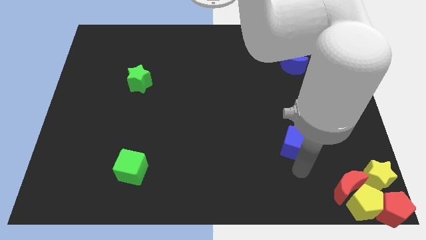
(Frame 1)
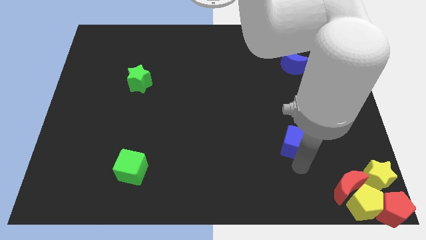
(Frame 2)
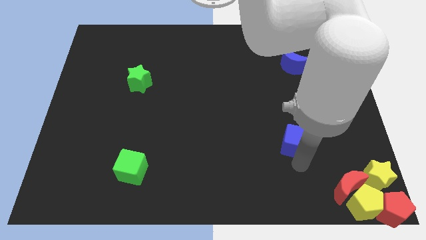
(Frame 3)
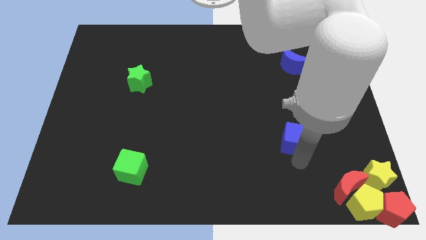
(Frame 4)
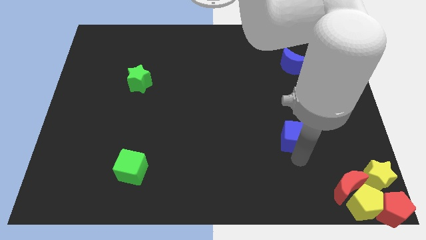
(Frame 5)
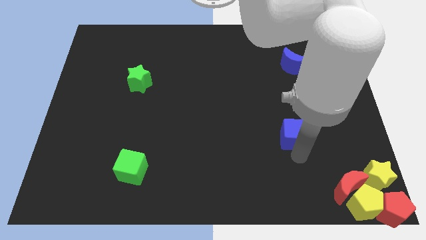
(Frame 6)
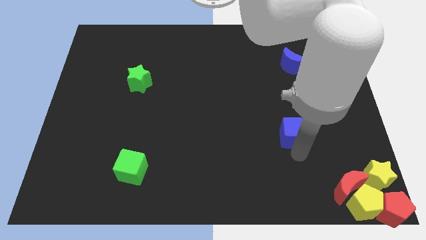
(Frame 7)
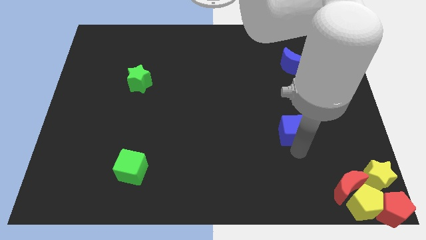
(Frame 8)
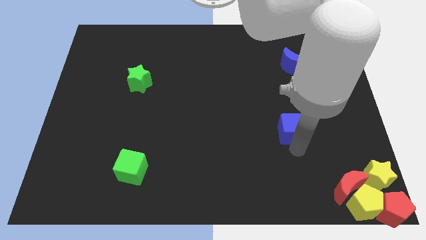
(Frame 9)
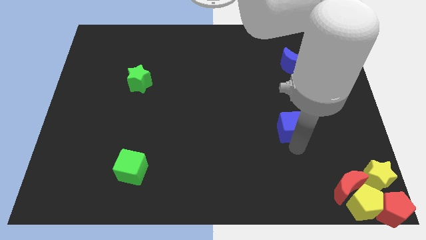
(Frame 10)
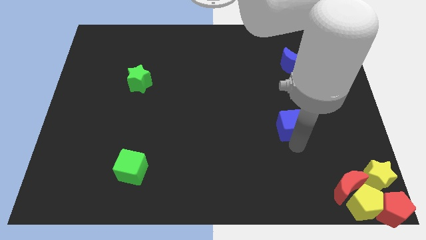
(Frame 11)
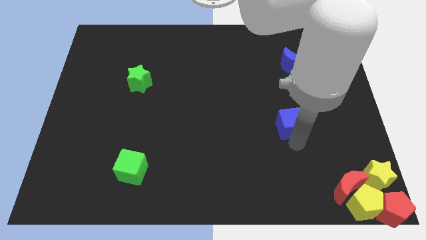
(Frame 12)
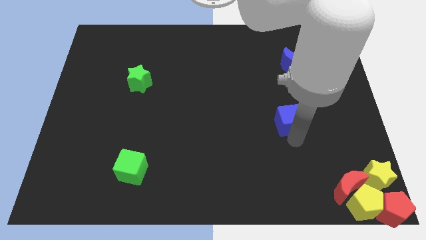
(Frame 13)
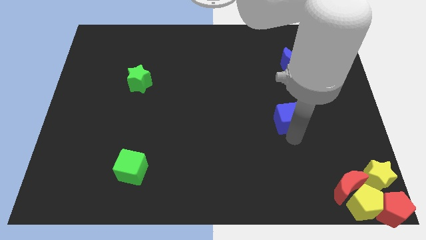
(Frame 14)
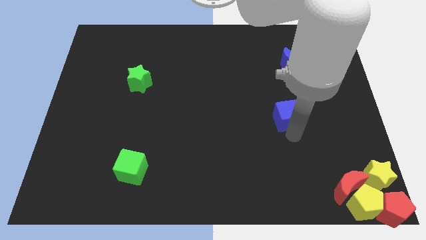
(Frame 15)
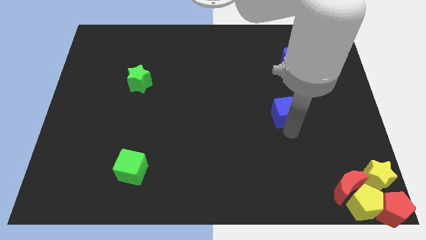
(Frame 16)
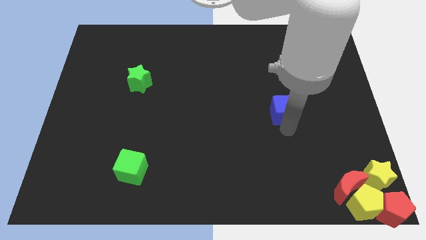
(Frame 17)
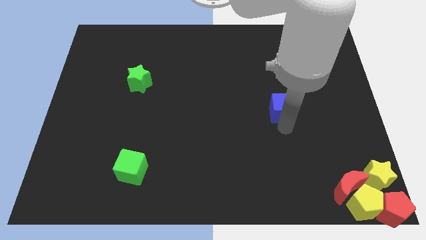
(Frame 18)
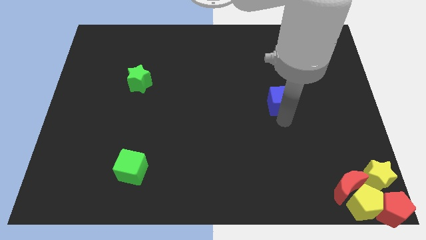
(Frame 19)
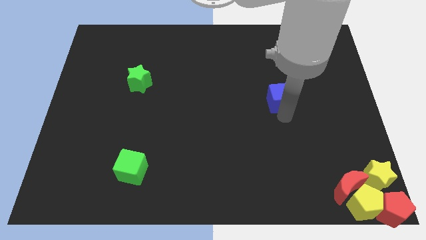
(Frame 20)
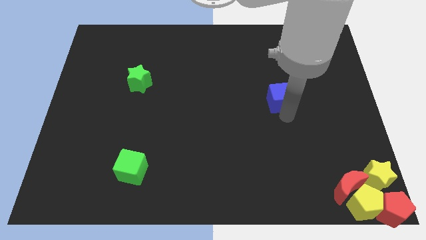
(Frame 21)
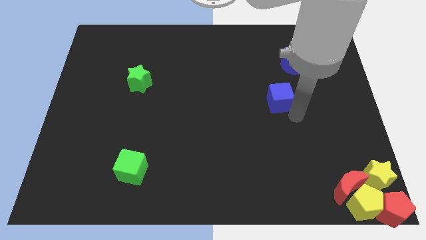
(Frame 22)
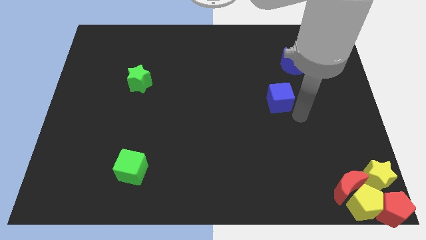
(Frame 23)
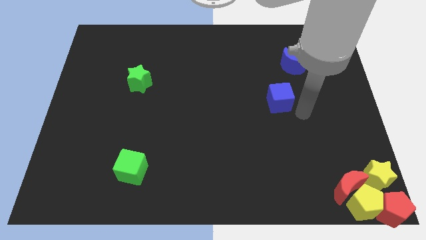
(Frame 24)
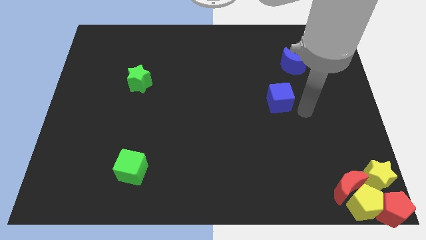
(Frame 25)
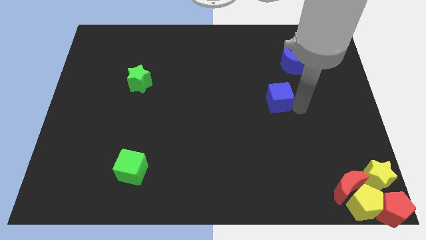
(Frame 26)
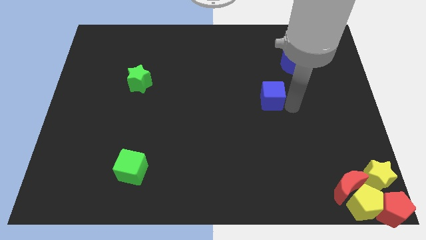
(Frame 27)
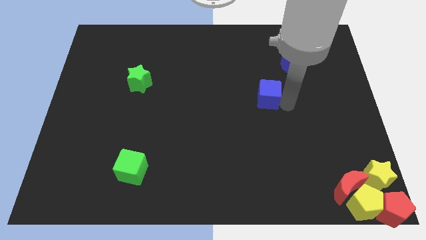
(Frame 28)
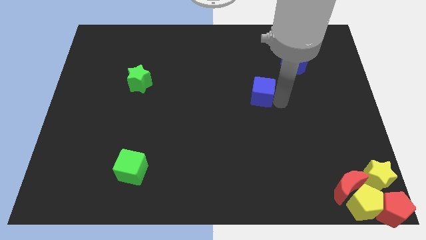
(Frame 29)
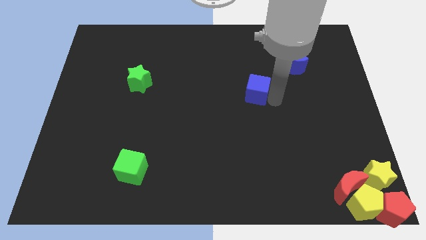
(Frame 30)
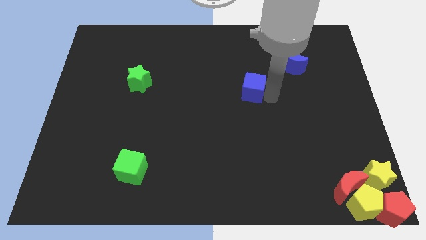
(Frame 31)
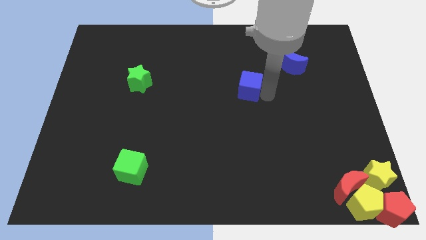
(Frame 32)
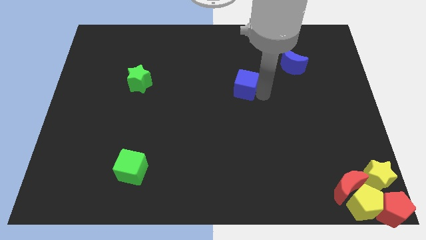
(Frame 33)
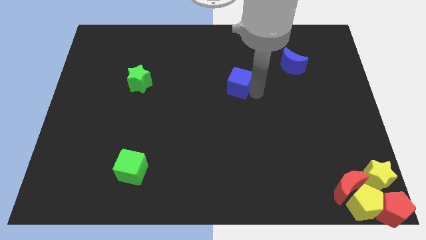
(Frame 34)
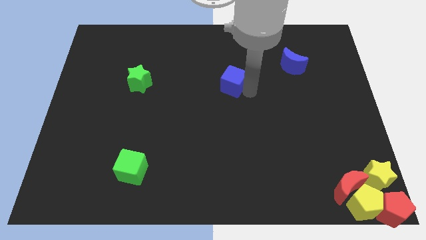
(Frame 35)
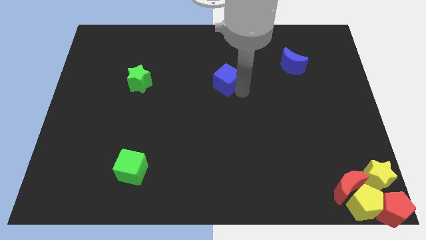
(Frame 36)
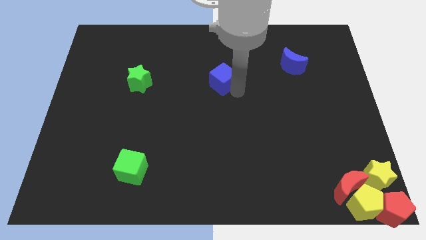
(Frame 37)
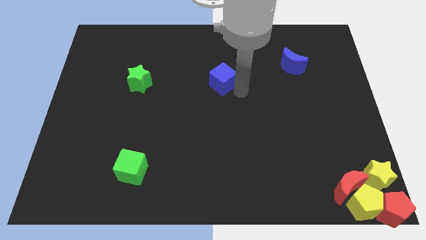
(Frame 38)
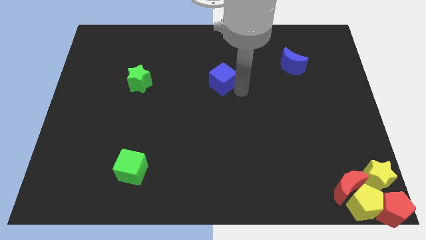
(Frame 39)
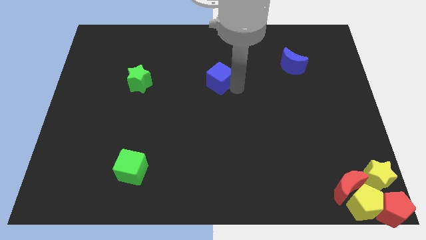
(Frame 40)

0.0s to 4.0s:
push the blue cube to the right of the green star

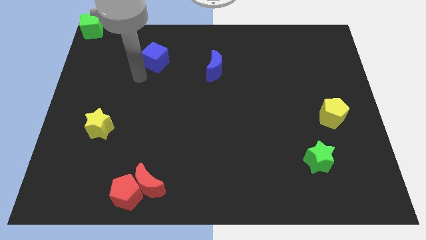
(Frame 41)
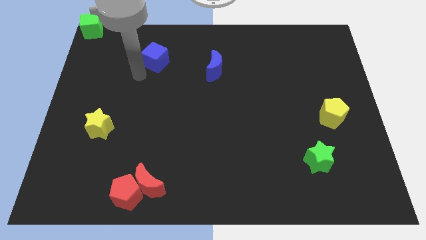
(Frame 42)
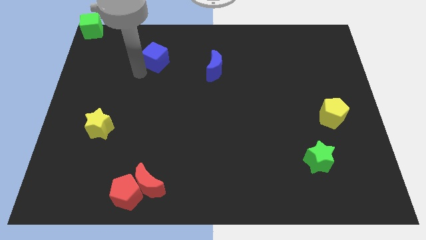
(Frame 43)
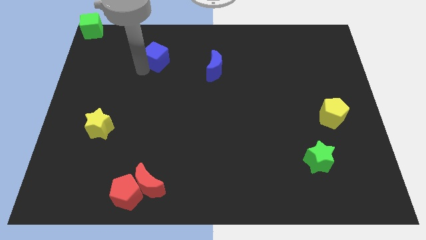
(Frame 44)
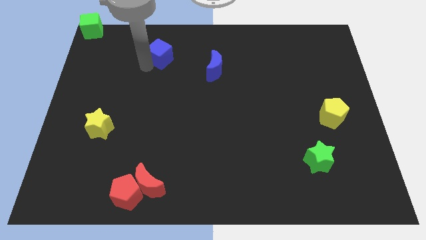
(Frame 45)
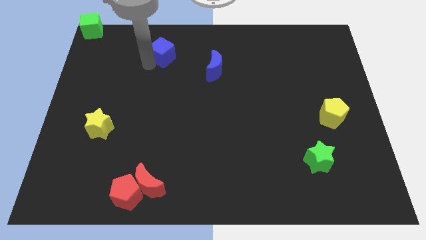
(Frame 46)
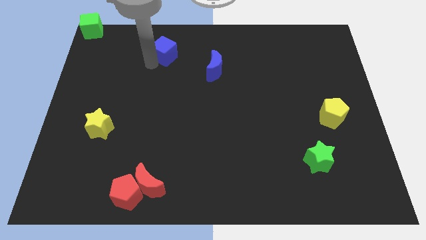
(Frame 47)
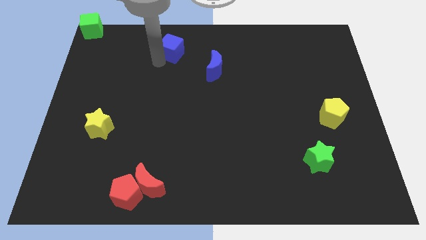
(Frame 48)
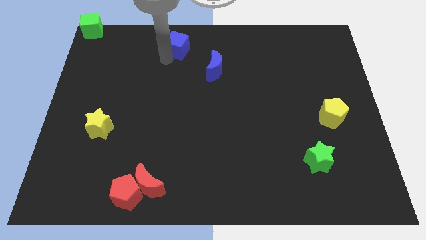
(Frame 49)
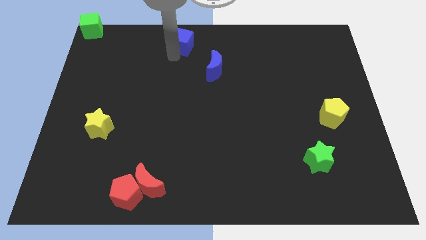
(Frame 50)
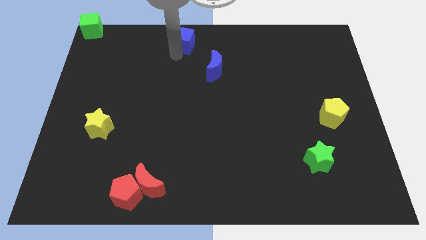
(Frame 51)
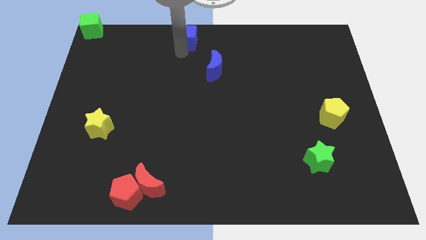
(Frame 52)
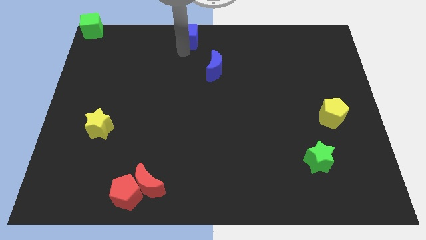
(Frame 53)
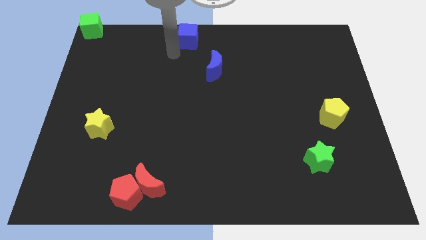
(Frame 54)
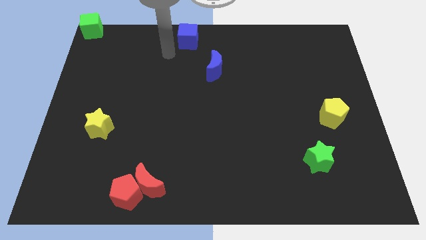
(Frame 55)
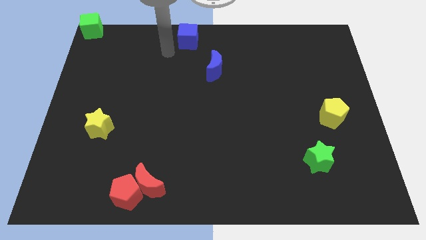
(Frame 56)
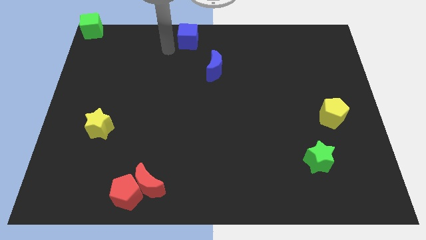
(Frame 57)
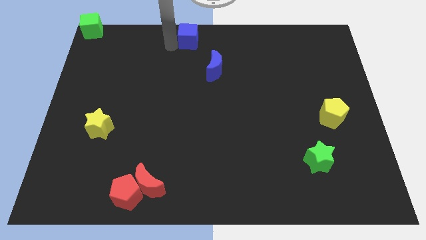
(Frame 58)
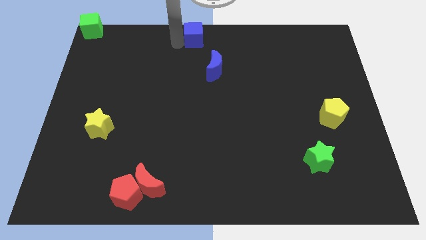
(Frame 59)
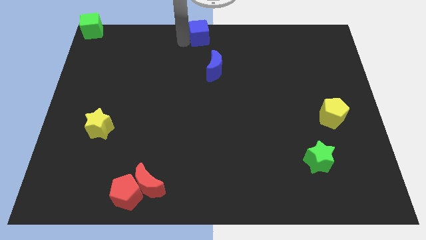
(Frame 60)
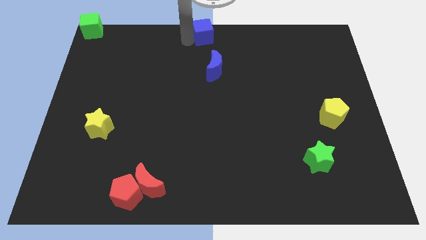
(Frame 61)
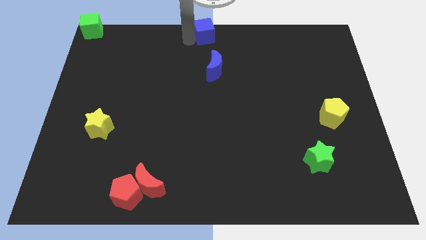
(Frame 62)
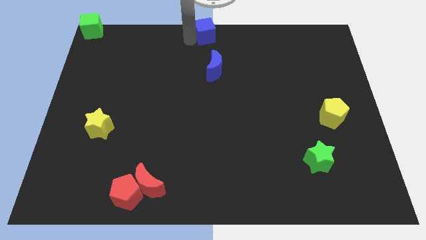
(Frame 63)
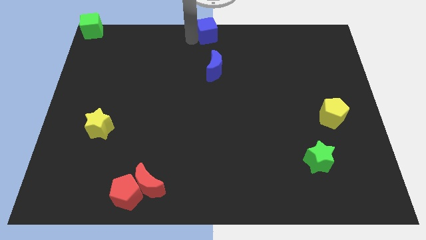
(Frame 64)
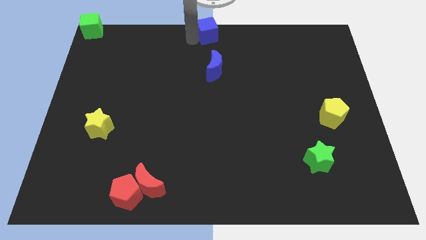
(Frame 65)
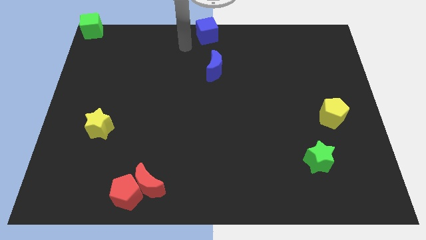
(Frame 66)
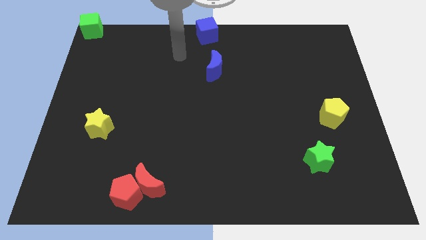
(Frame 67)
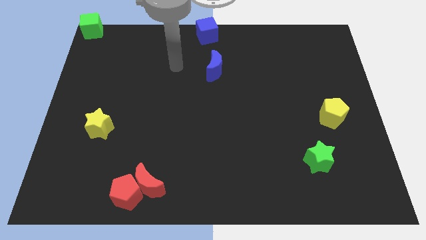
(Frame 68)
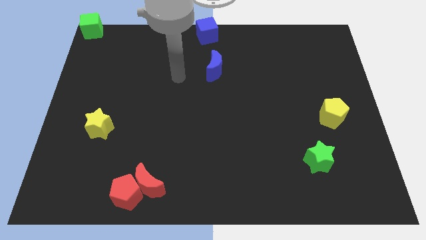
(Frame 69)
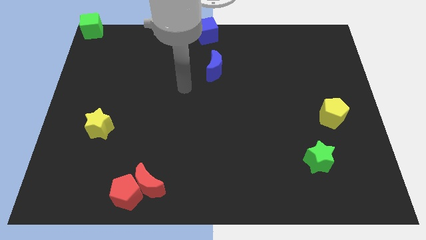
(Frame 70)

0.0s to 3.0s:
place blue cube above blue moon

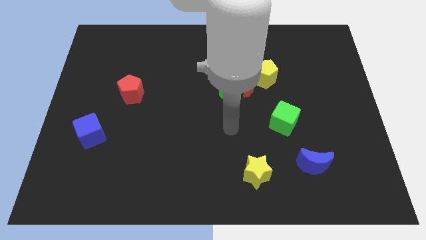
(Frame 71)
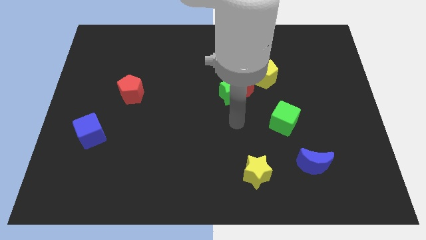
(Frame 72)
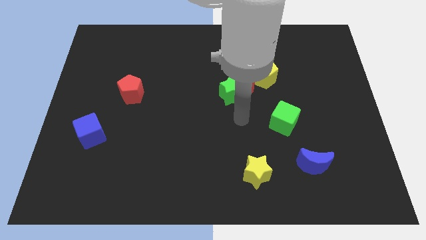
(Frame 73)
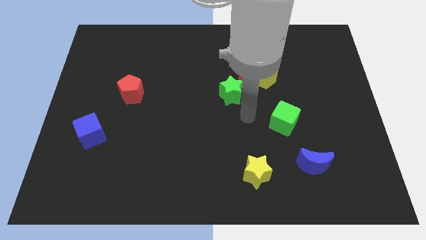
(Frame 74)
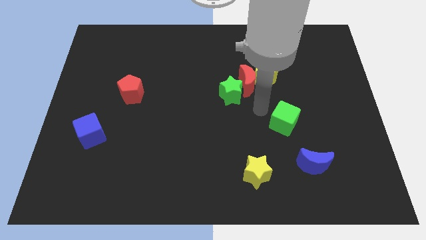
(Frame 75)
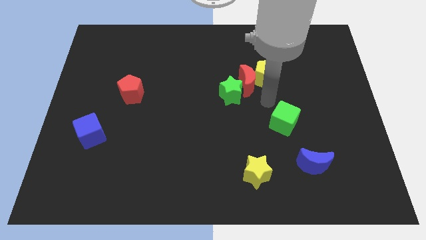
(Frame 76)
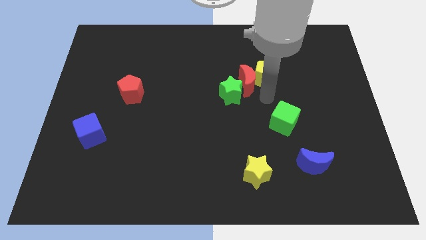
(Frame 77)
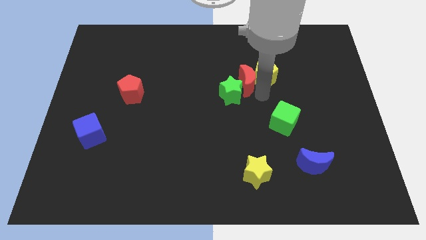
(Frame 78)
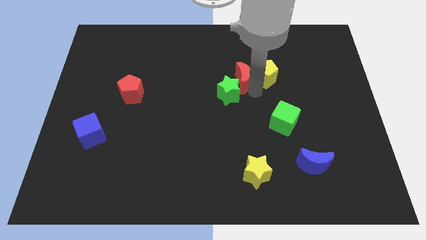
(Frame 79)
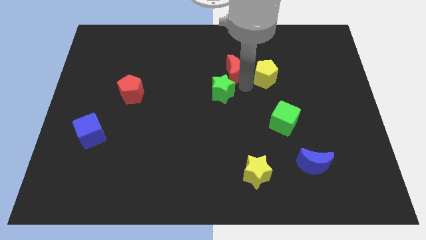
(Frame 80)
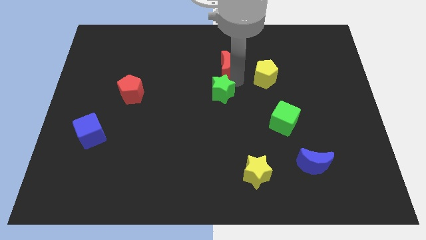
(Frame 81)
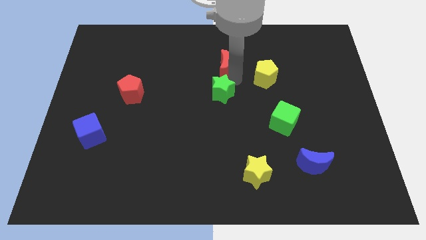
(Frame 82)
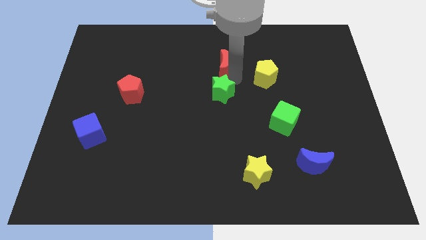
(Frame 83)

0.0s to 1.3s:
separate the red crescent from the green star and the yellow pentagon

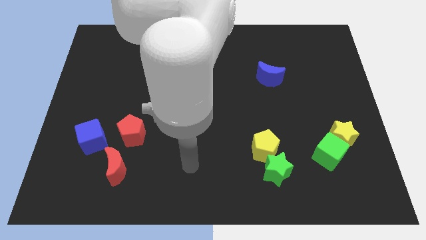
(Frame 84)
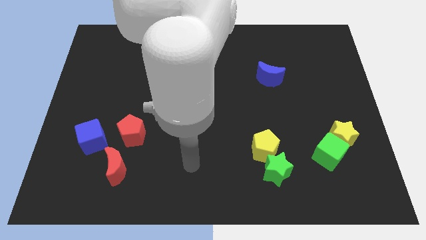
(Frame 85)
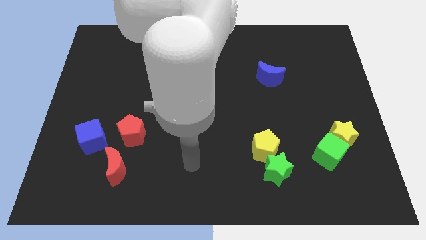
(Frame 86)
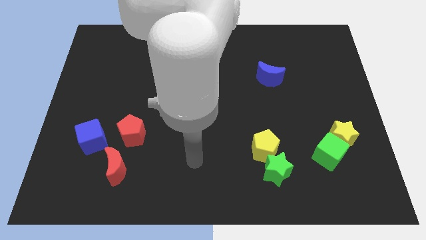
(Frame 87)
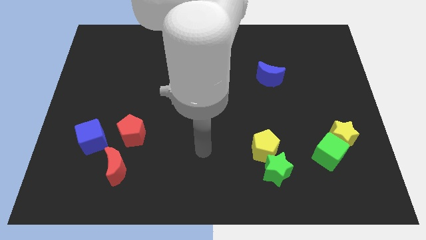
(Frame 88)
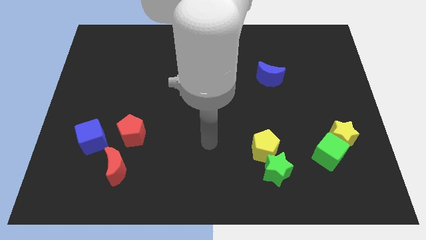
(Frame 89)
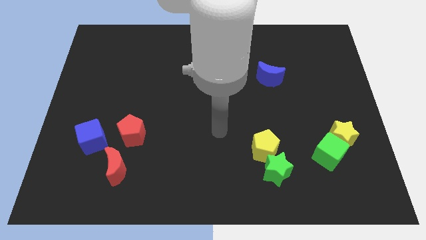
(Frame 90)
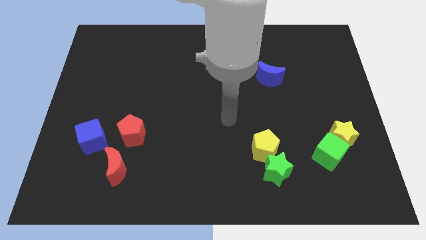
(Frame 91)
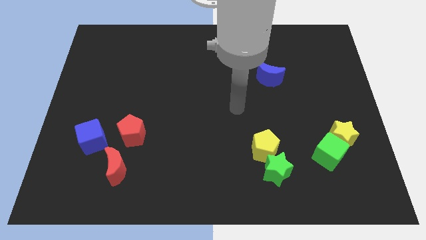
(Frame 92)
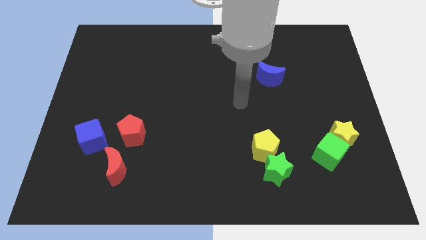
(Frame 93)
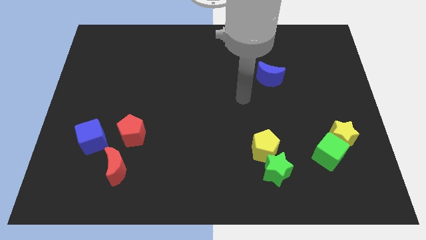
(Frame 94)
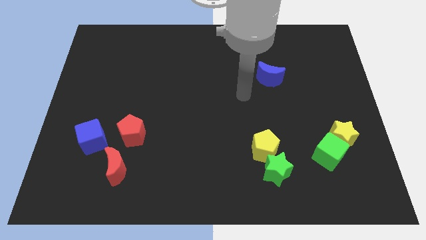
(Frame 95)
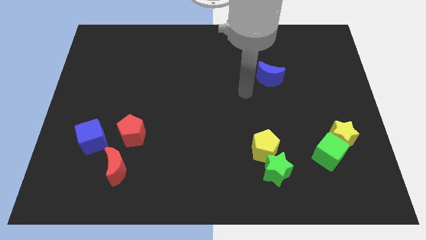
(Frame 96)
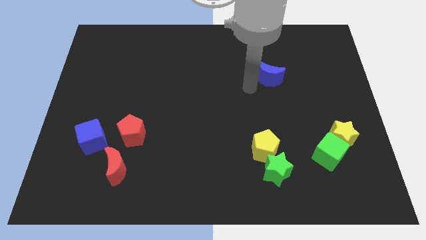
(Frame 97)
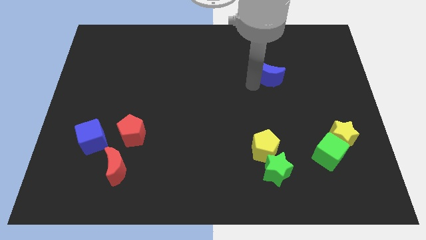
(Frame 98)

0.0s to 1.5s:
move your arm towards the blue moon
